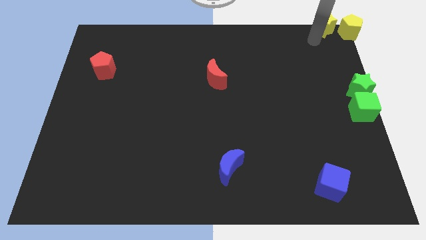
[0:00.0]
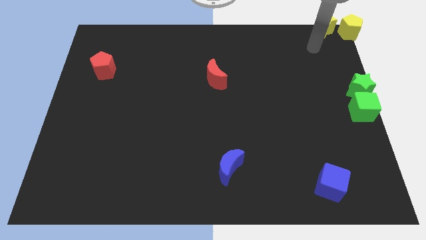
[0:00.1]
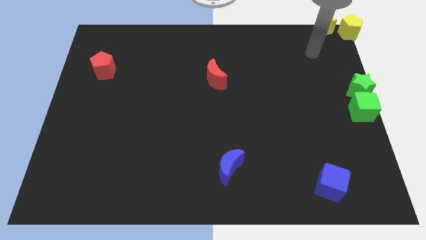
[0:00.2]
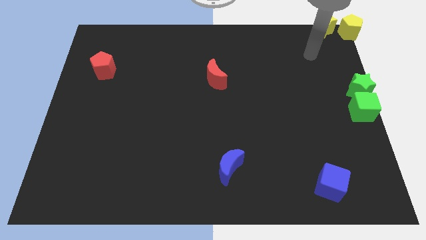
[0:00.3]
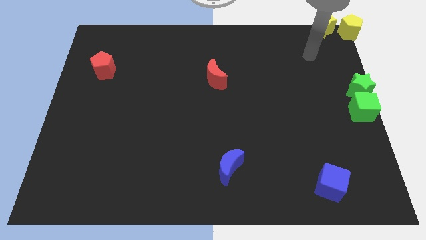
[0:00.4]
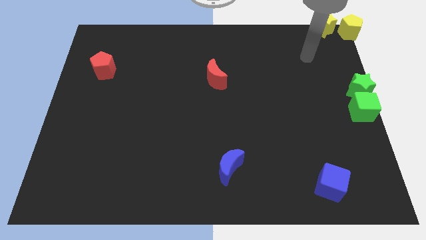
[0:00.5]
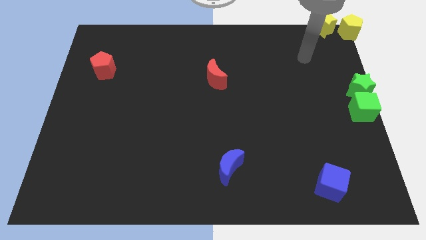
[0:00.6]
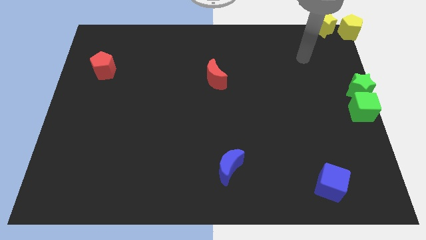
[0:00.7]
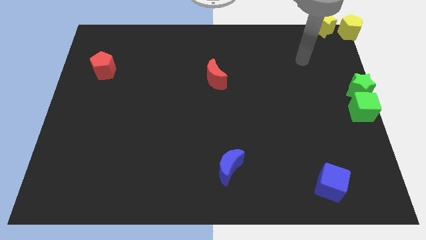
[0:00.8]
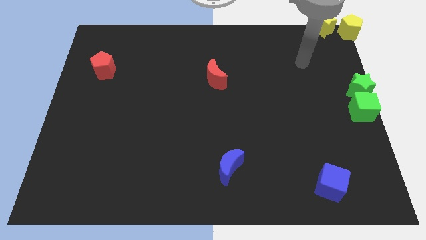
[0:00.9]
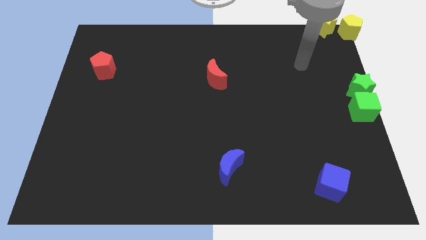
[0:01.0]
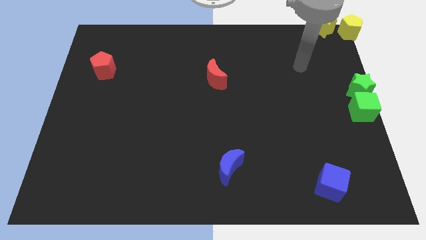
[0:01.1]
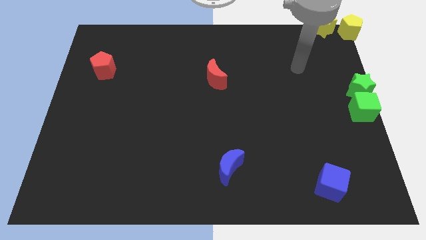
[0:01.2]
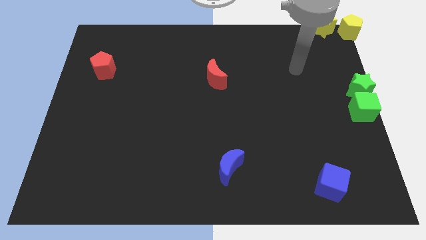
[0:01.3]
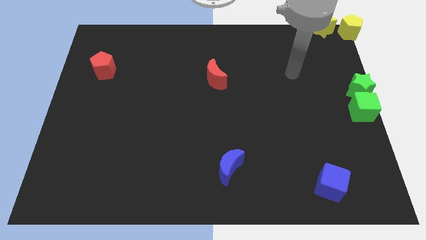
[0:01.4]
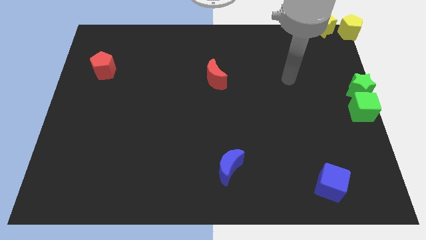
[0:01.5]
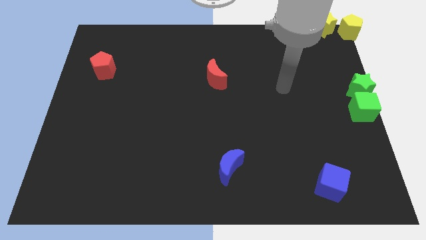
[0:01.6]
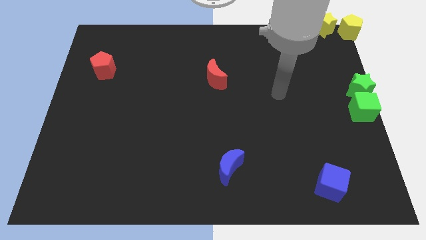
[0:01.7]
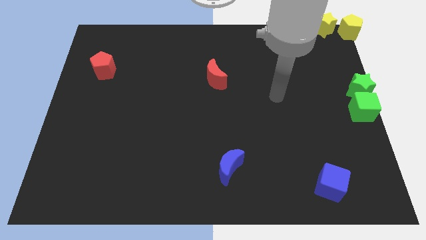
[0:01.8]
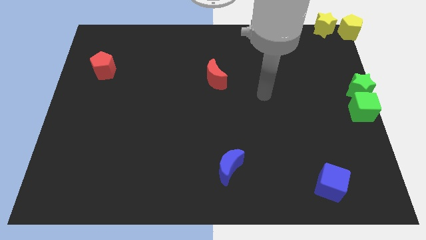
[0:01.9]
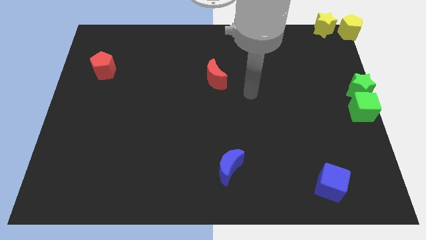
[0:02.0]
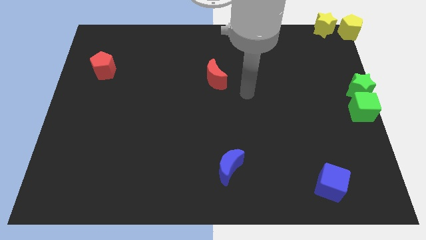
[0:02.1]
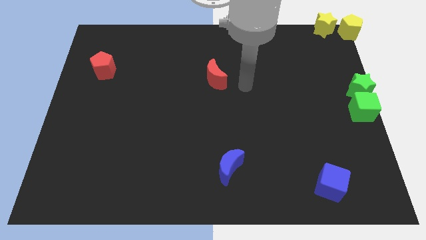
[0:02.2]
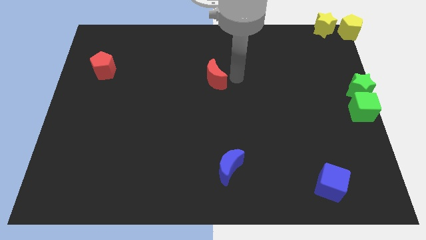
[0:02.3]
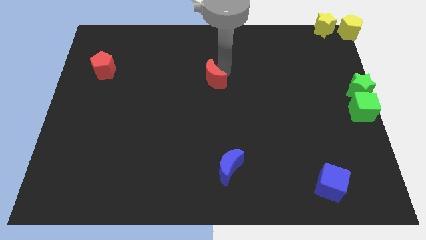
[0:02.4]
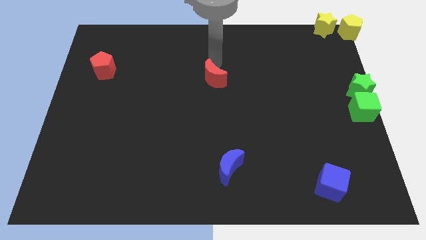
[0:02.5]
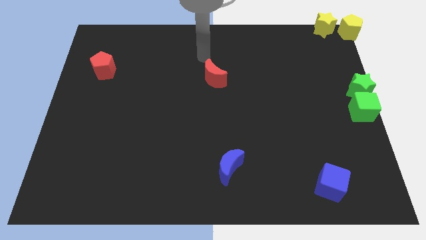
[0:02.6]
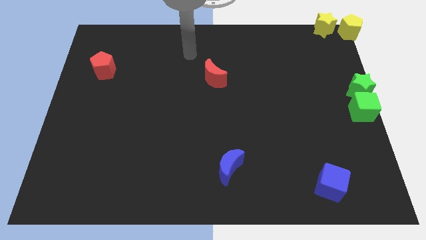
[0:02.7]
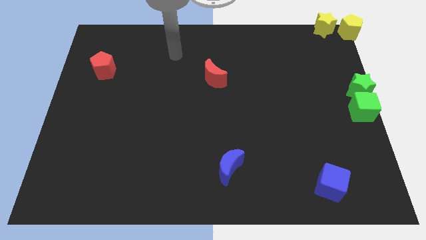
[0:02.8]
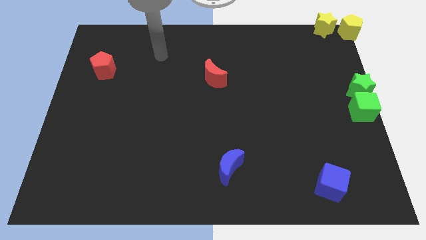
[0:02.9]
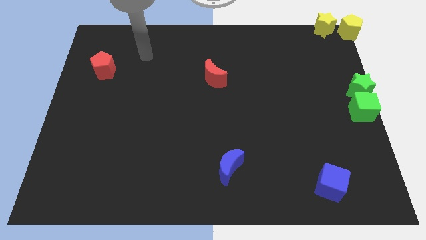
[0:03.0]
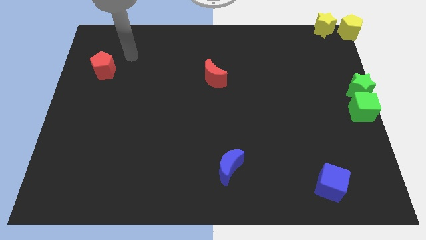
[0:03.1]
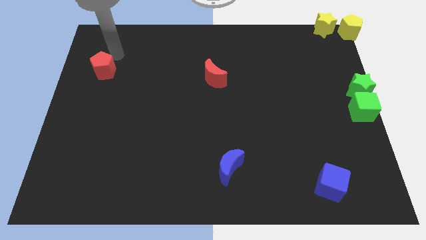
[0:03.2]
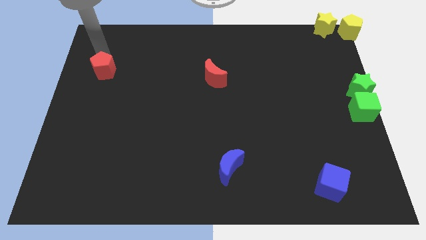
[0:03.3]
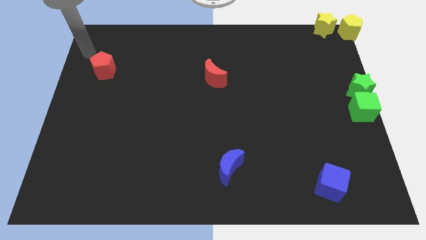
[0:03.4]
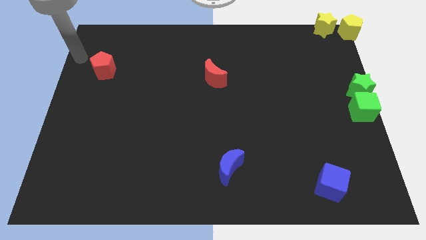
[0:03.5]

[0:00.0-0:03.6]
move your arm around the red pentagon

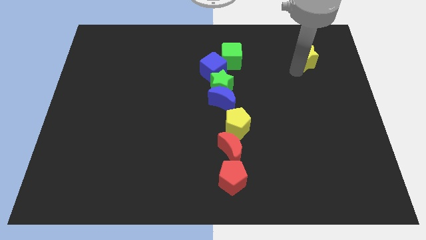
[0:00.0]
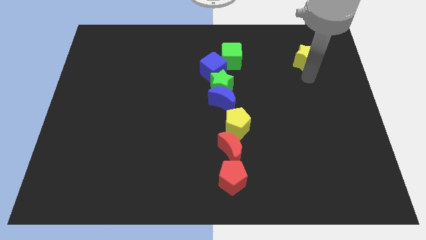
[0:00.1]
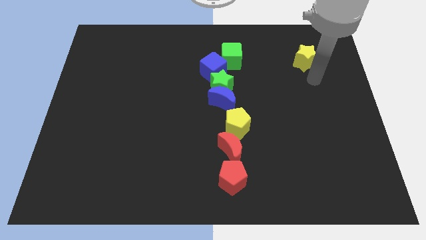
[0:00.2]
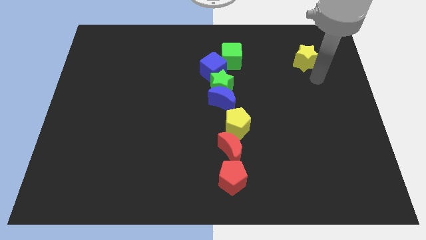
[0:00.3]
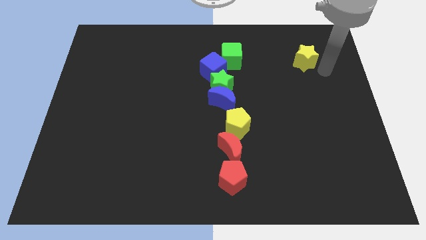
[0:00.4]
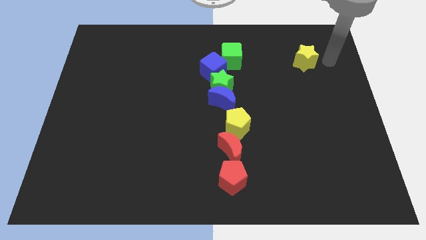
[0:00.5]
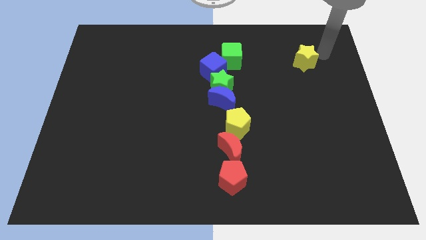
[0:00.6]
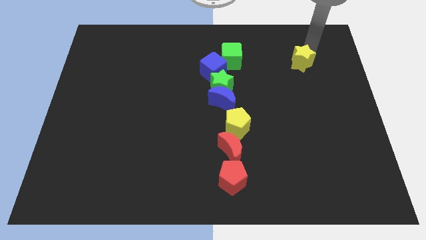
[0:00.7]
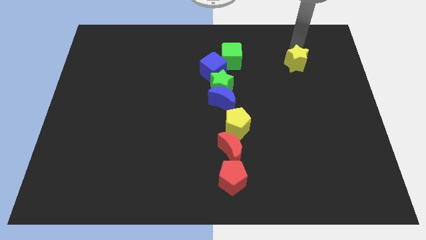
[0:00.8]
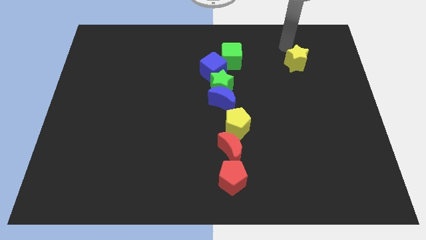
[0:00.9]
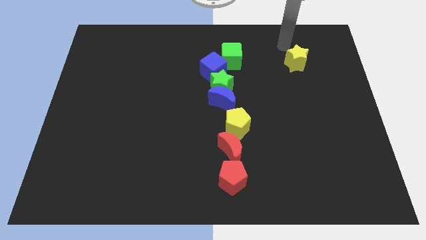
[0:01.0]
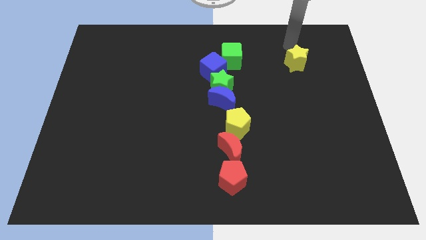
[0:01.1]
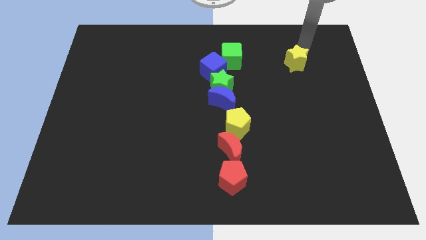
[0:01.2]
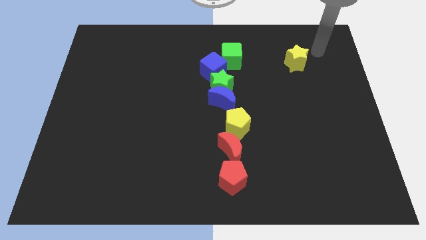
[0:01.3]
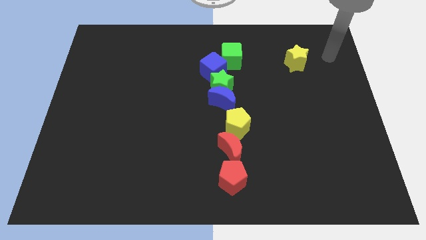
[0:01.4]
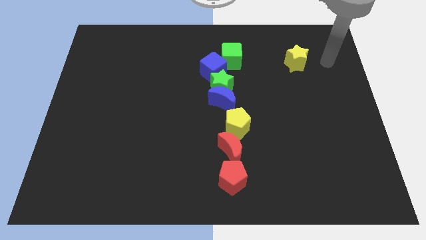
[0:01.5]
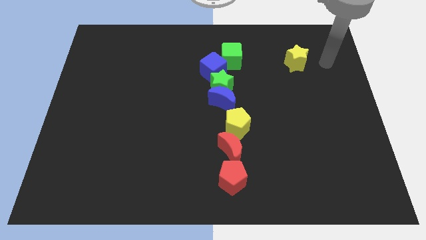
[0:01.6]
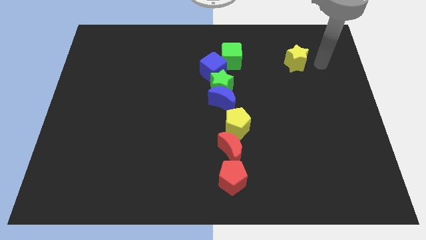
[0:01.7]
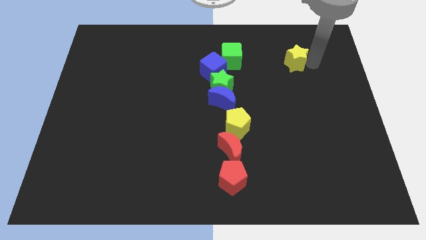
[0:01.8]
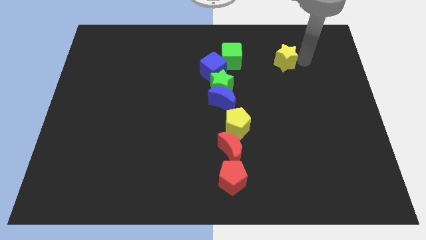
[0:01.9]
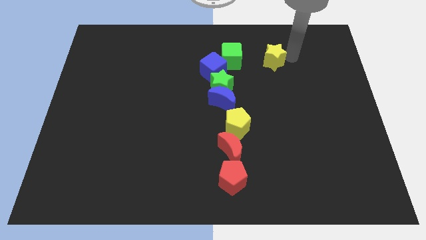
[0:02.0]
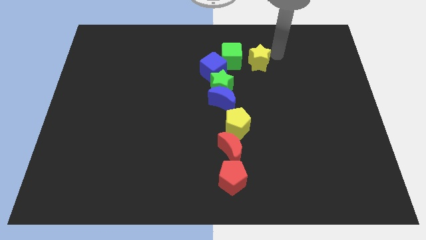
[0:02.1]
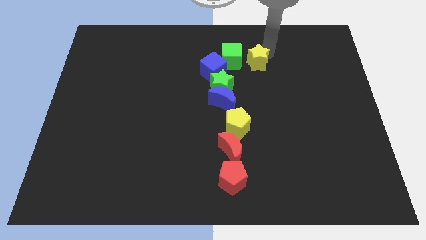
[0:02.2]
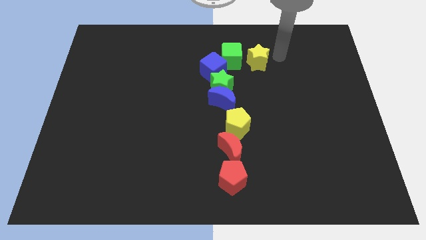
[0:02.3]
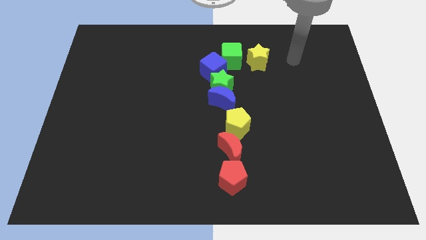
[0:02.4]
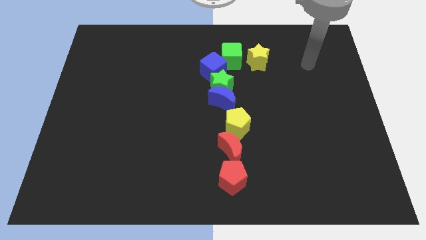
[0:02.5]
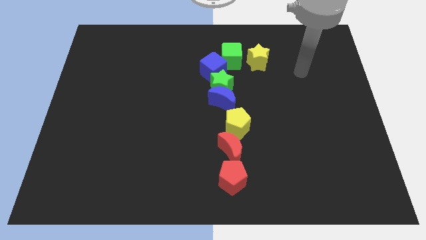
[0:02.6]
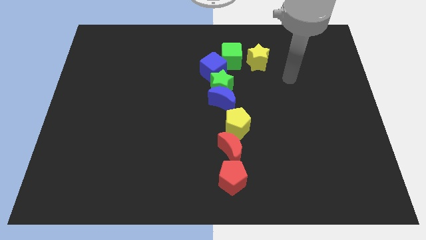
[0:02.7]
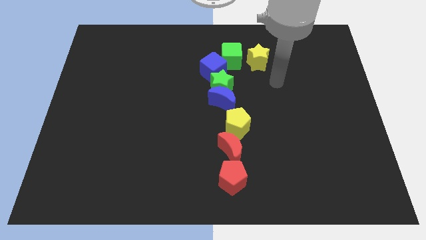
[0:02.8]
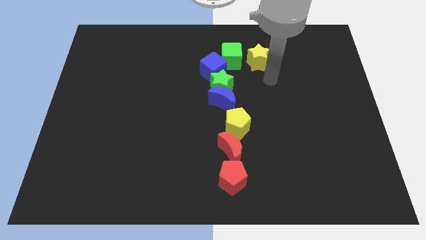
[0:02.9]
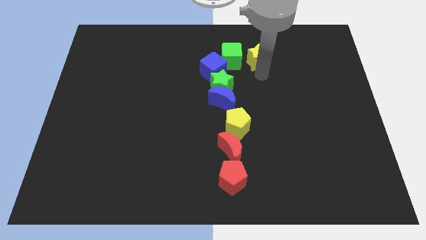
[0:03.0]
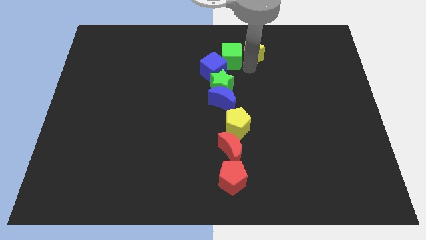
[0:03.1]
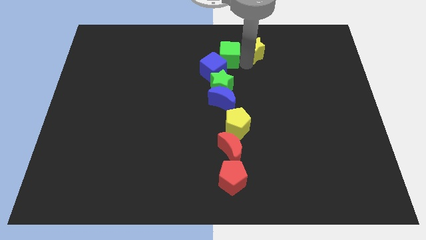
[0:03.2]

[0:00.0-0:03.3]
move the yellow star to the right of the green cube

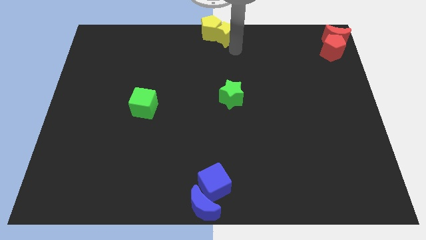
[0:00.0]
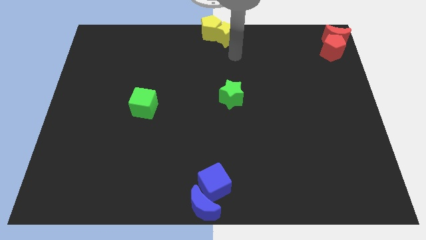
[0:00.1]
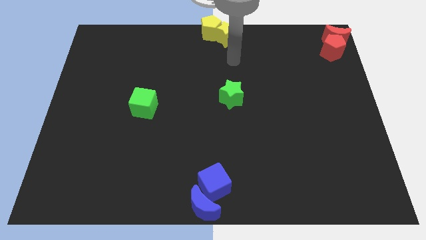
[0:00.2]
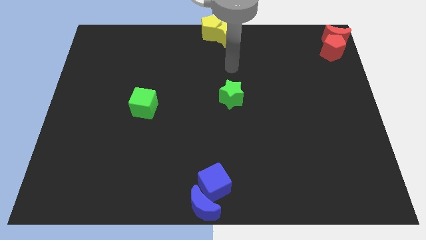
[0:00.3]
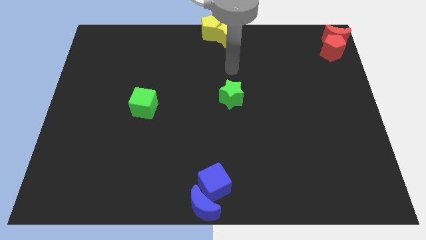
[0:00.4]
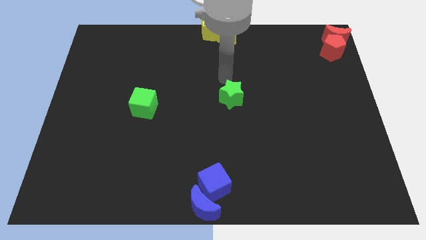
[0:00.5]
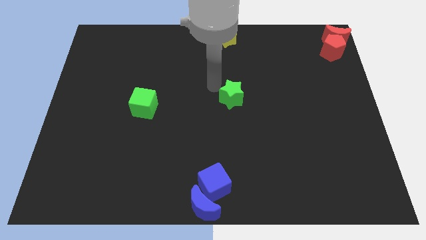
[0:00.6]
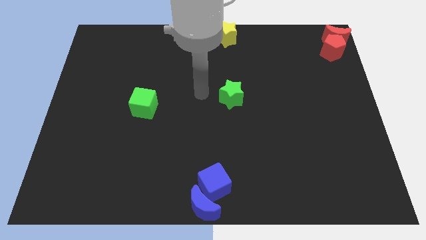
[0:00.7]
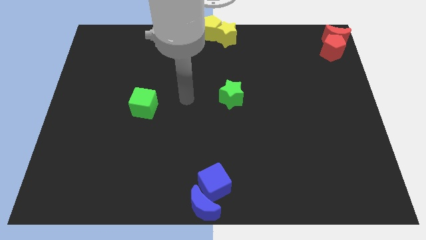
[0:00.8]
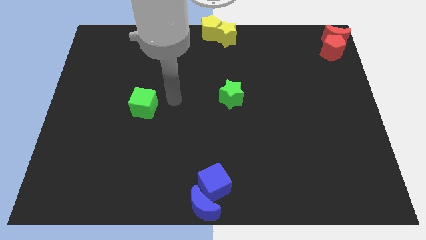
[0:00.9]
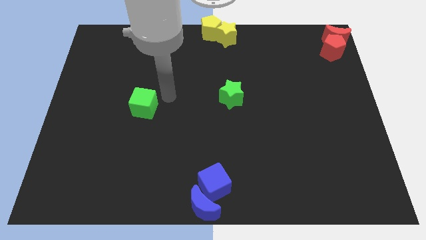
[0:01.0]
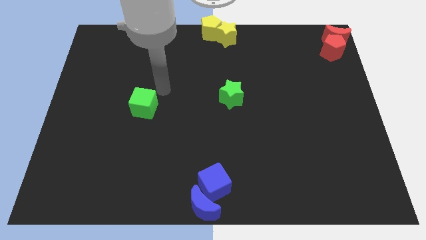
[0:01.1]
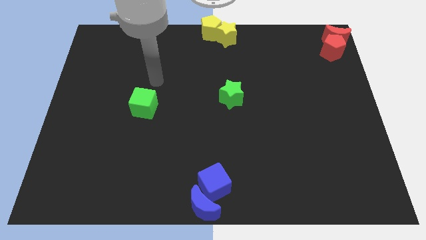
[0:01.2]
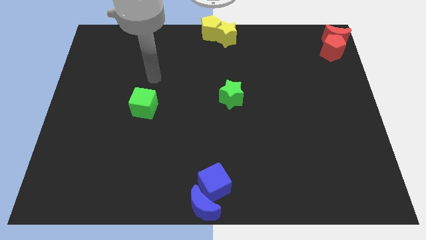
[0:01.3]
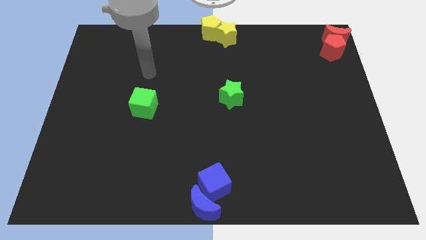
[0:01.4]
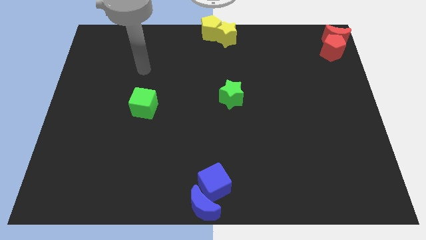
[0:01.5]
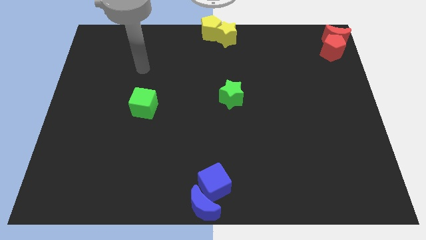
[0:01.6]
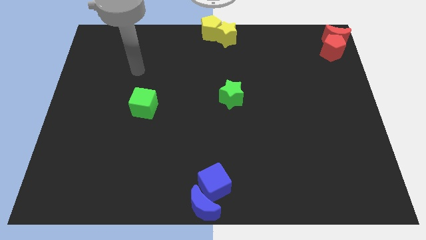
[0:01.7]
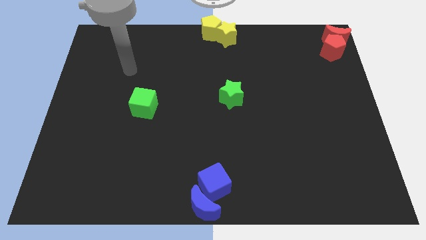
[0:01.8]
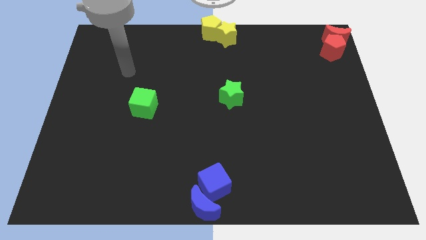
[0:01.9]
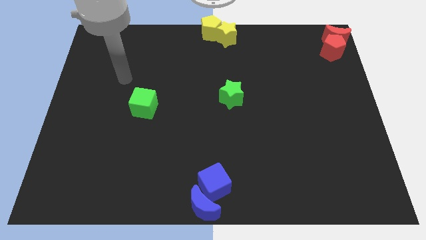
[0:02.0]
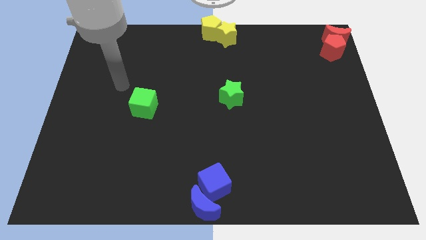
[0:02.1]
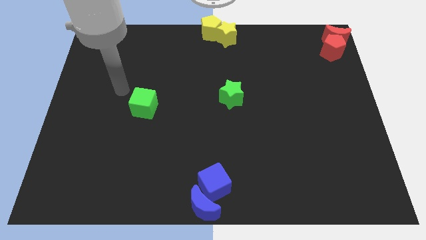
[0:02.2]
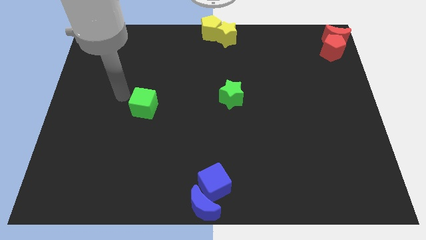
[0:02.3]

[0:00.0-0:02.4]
place the arm to the left of the green cube
